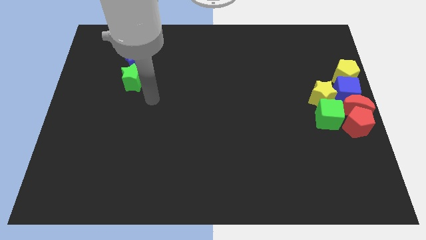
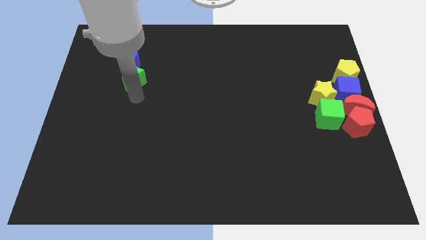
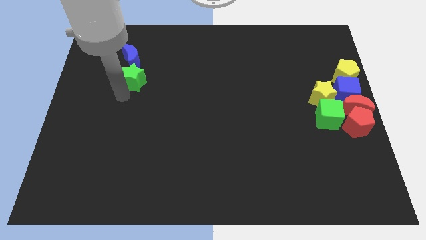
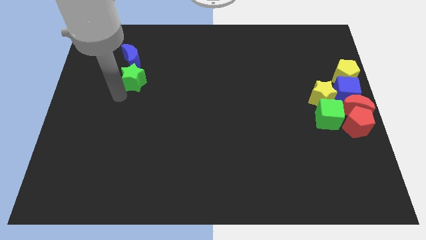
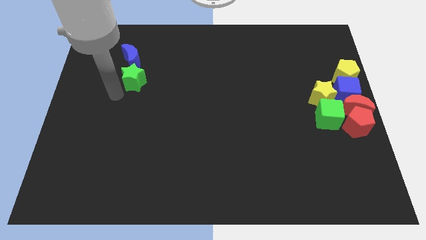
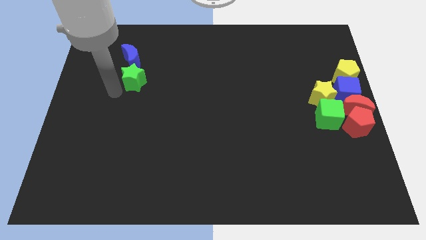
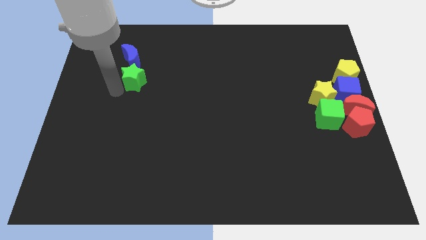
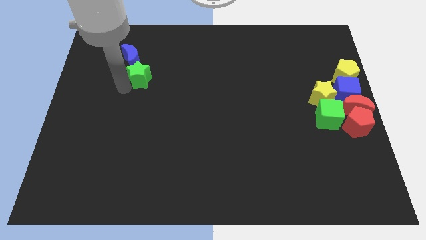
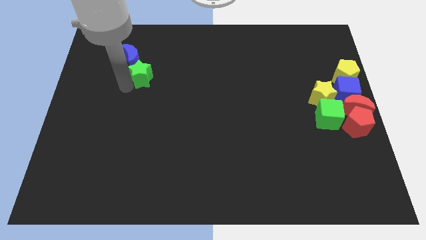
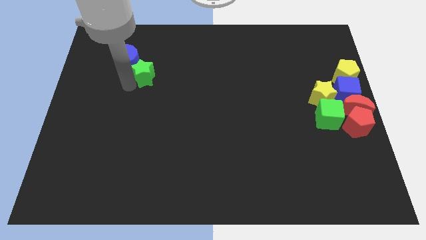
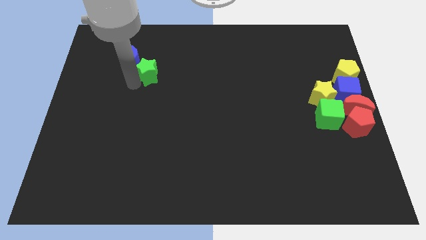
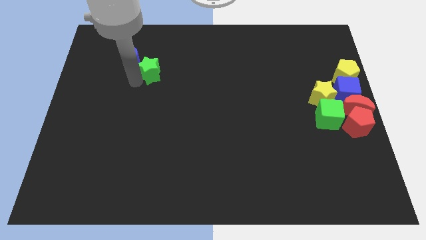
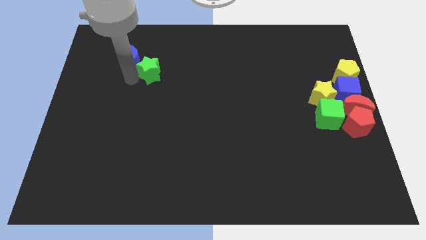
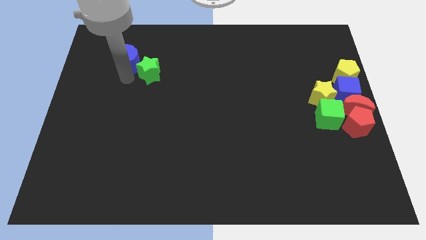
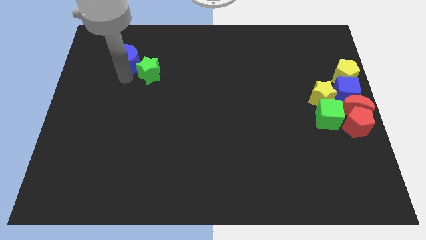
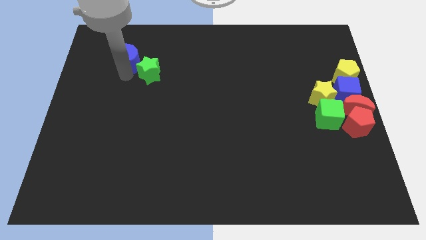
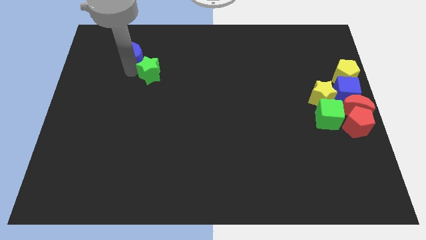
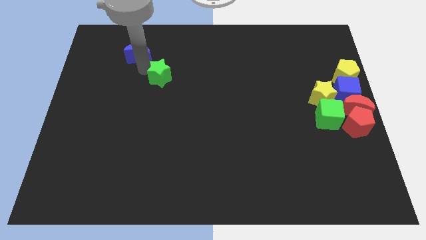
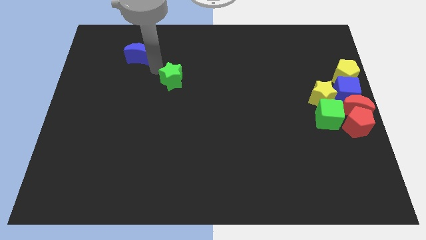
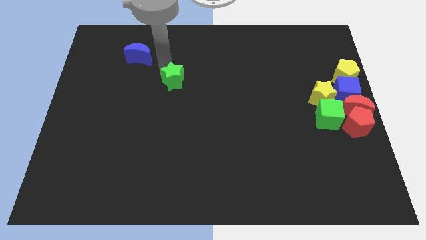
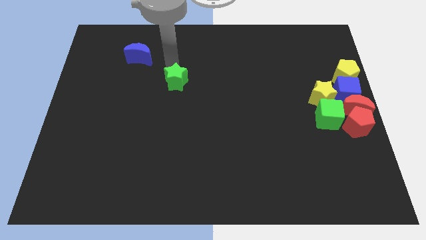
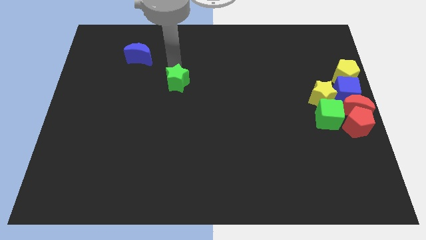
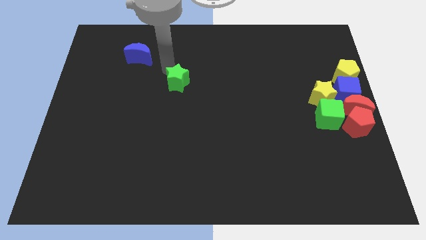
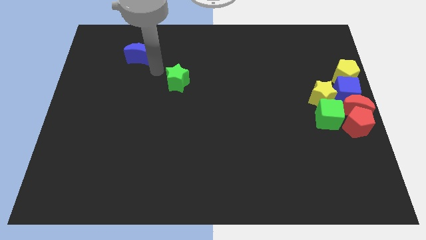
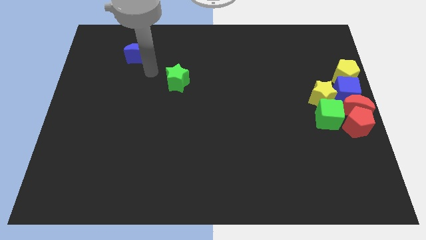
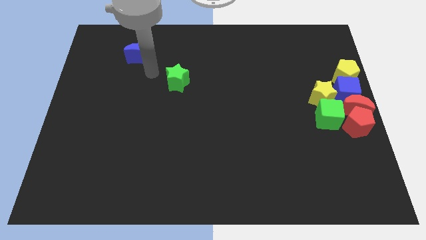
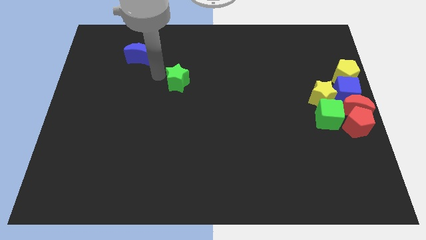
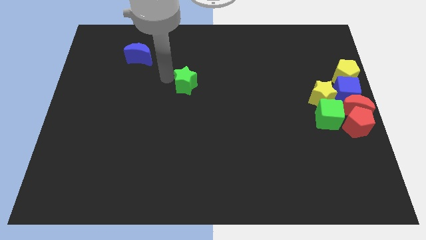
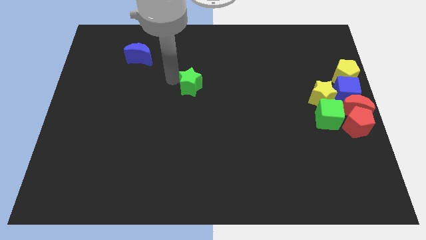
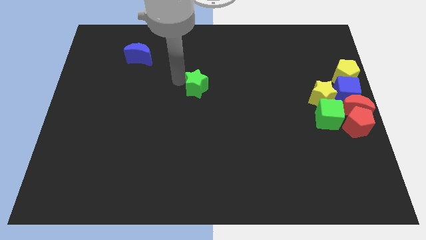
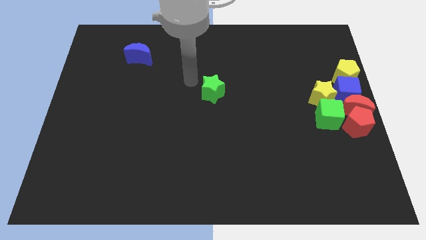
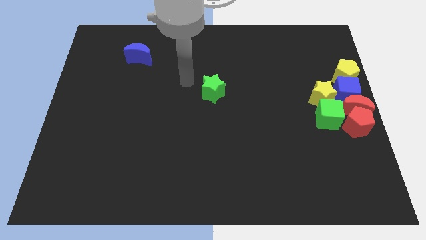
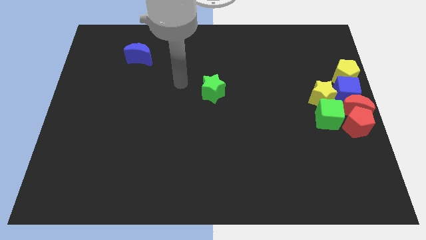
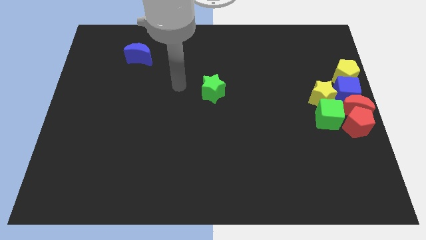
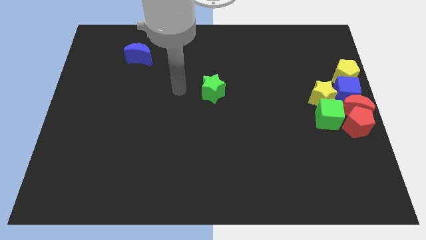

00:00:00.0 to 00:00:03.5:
push the green star towards the center of the board

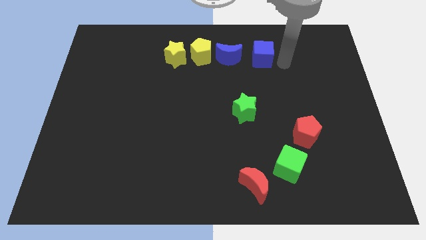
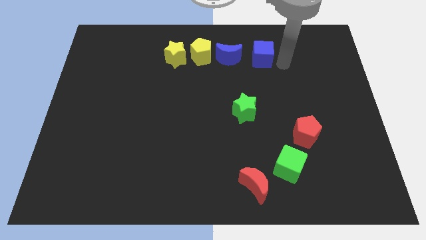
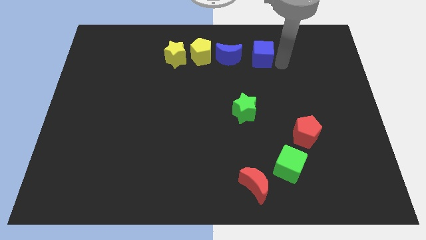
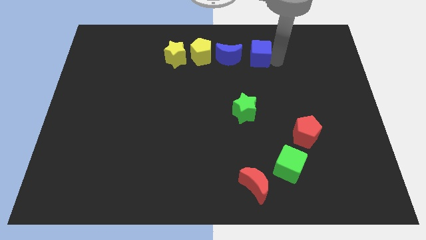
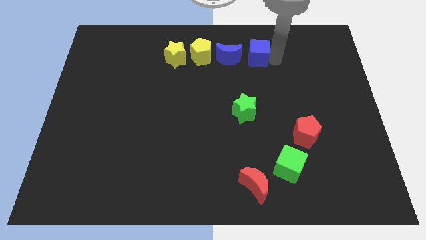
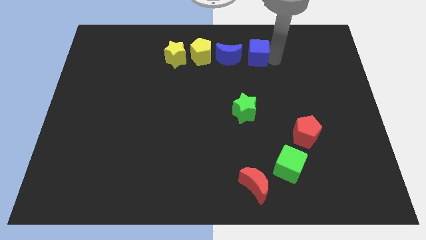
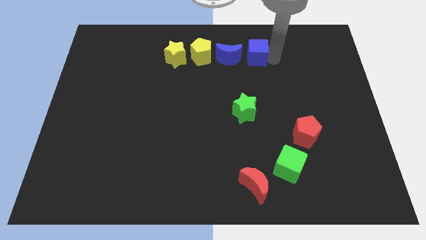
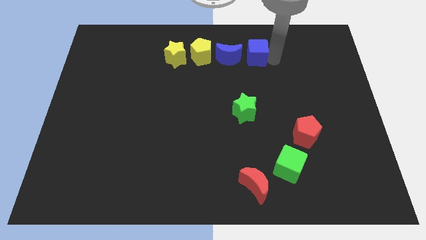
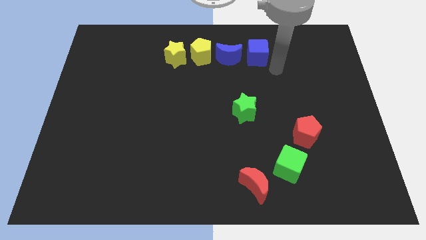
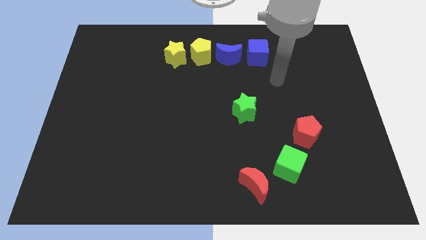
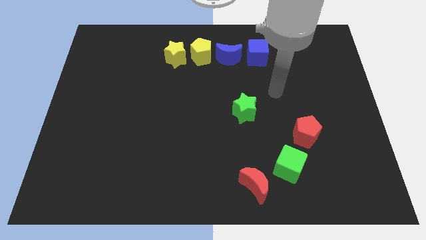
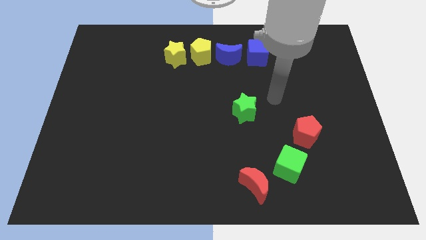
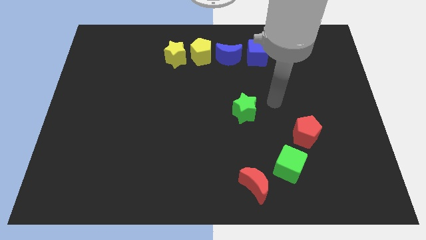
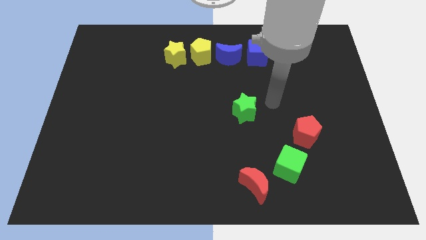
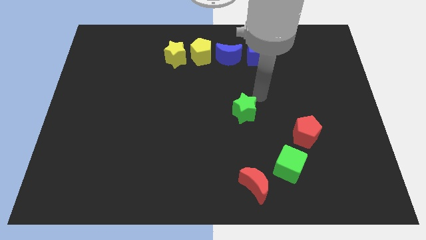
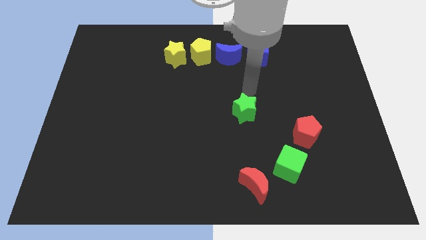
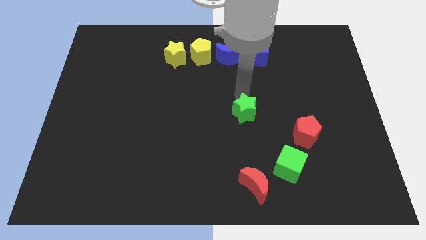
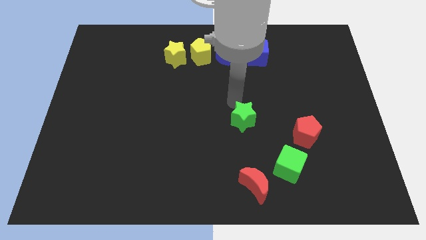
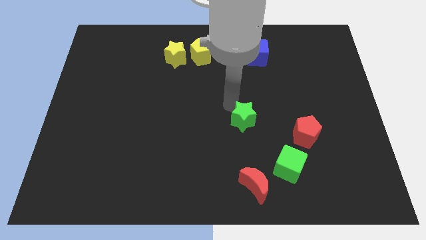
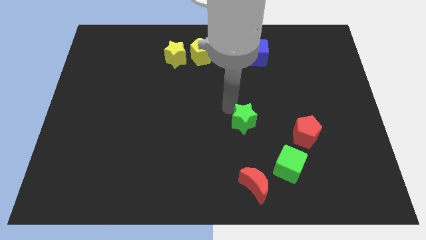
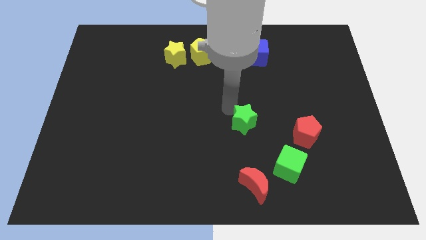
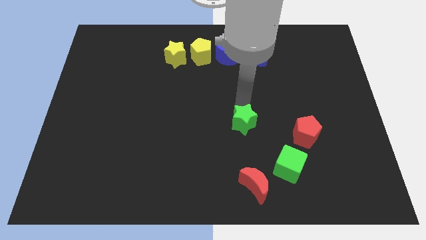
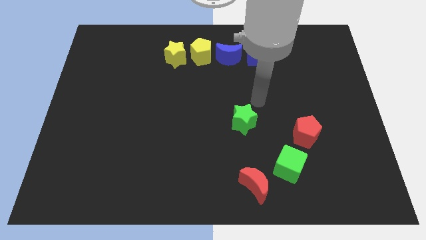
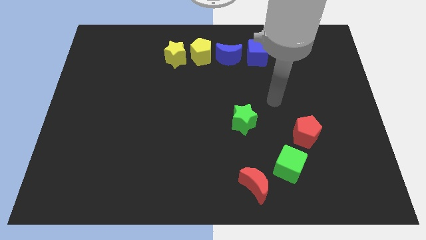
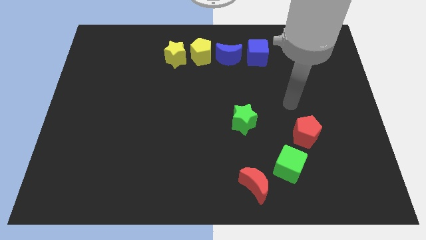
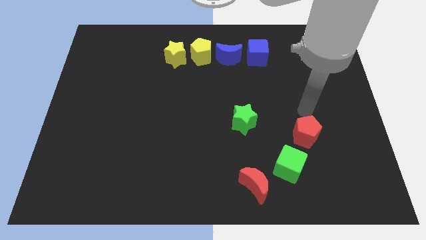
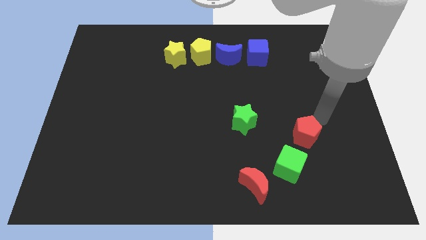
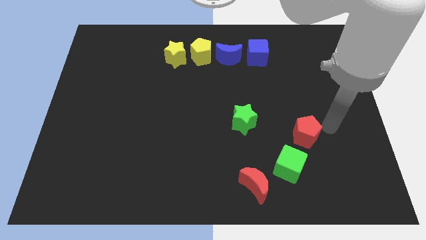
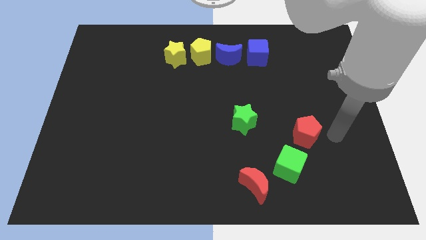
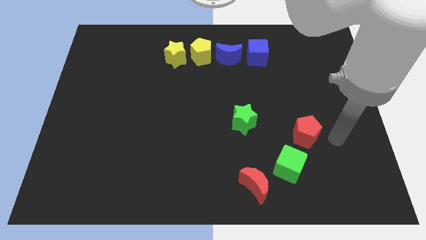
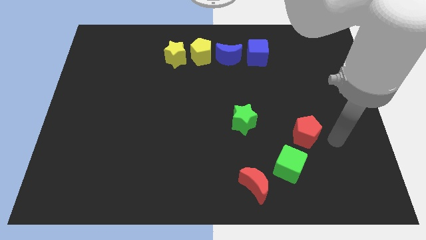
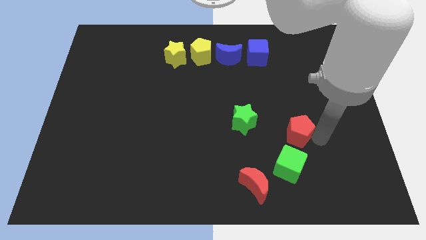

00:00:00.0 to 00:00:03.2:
push the green star to bottom side

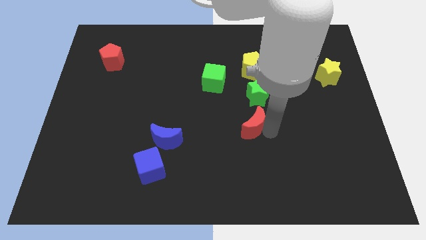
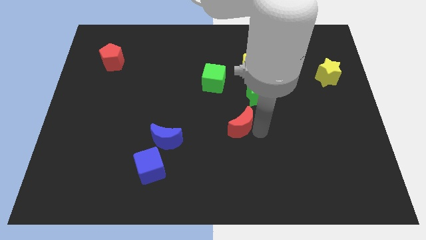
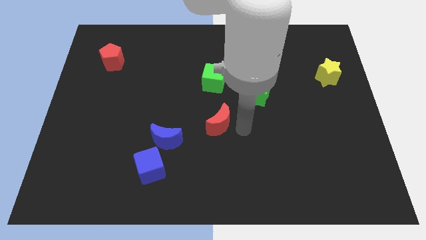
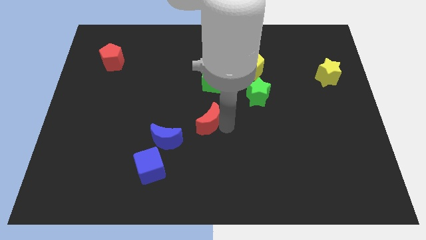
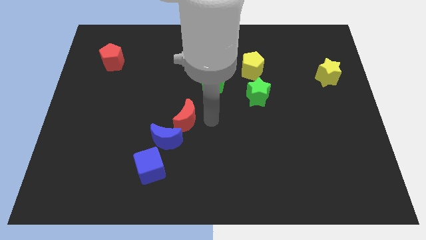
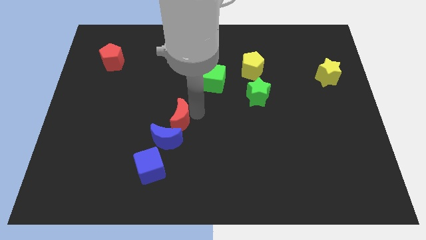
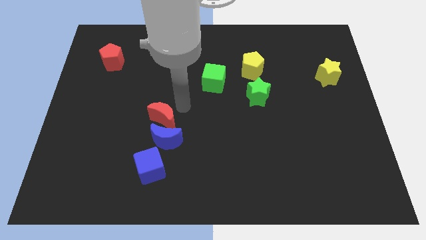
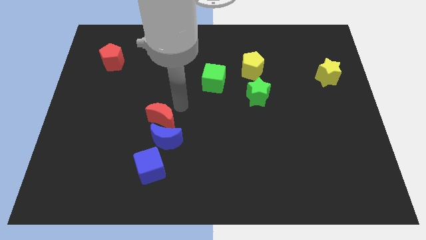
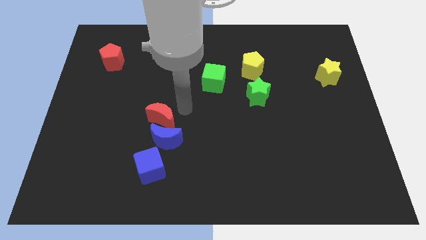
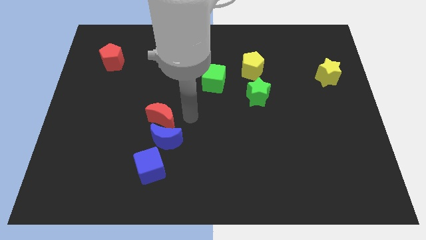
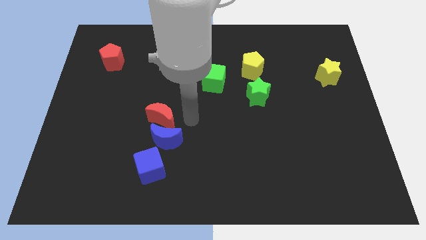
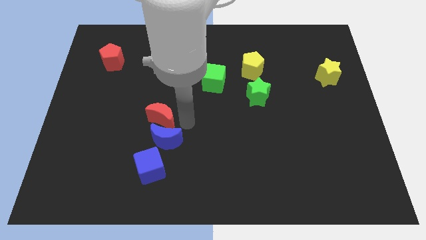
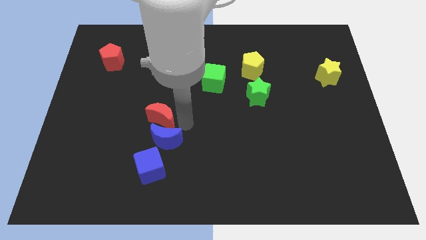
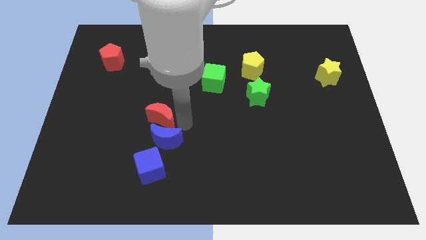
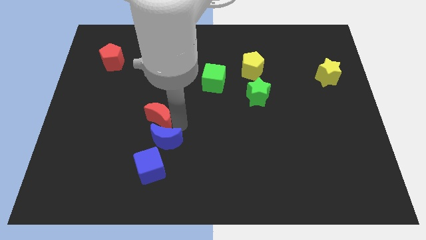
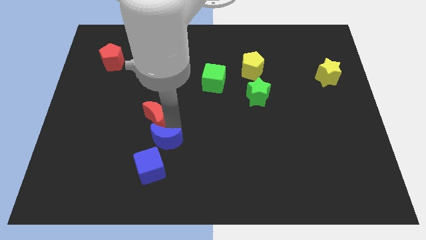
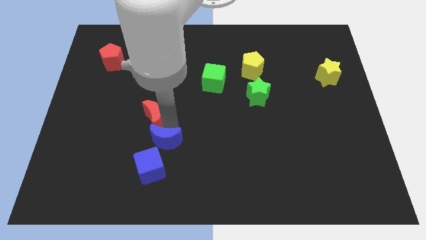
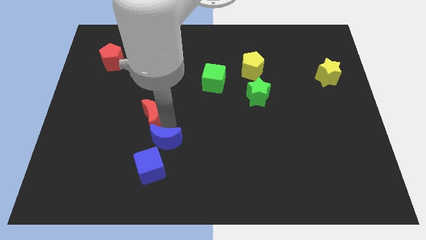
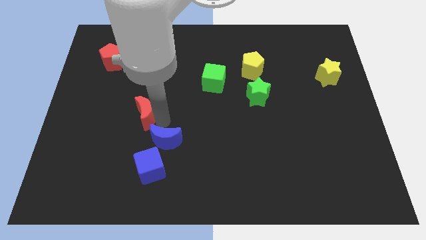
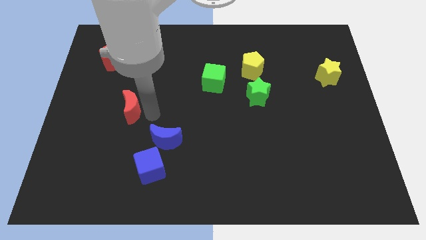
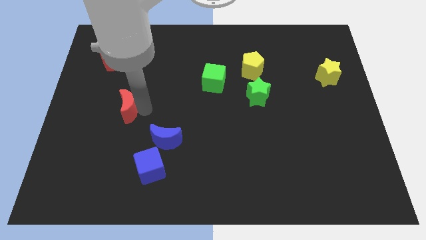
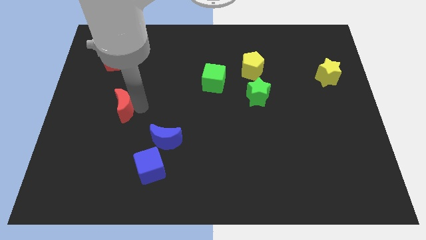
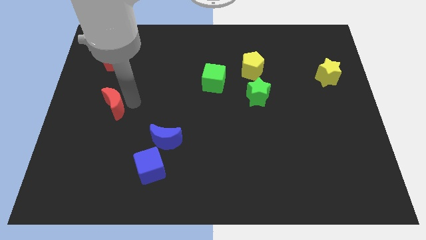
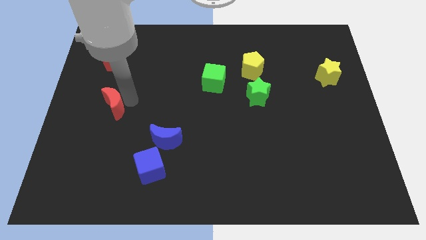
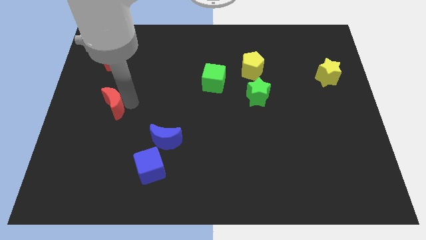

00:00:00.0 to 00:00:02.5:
push the red crescent to the bottom of the red pentagon
